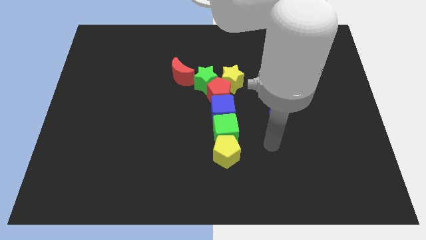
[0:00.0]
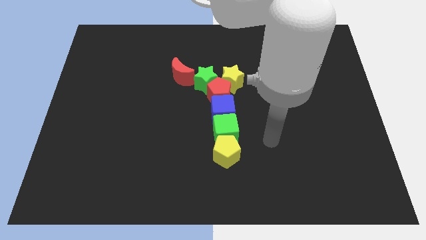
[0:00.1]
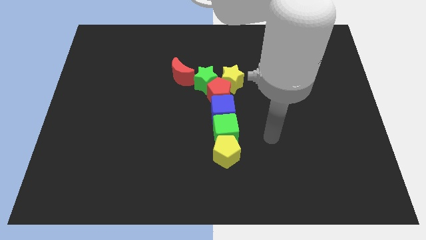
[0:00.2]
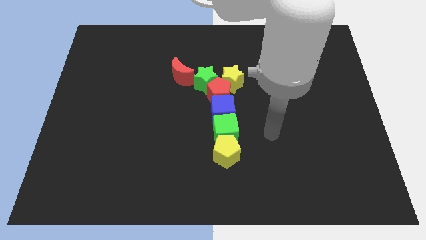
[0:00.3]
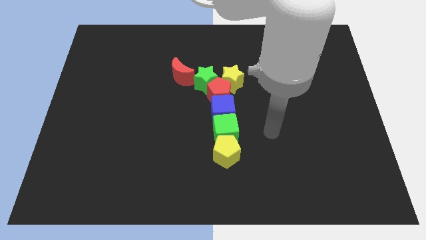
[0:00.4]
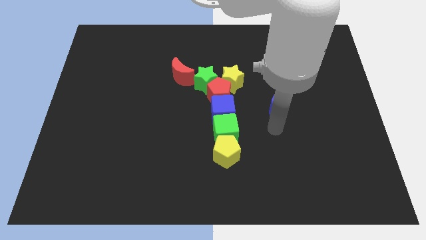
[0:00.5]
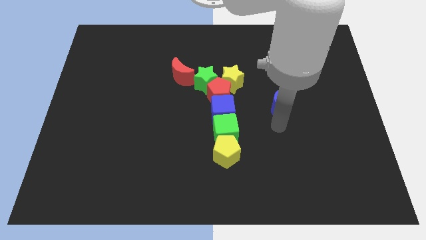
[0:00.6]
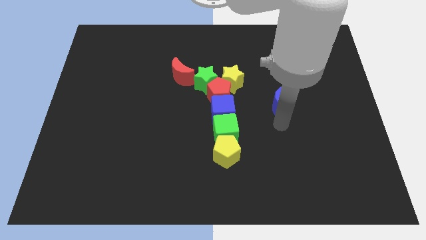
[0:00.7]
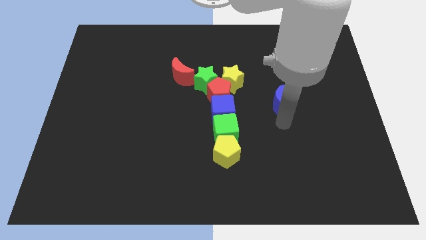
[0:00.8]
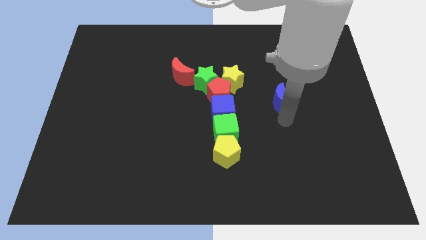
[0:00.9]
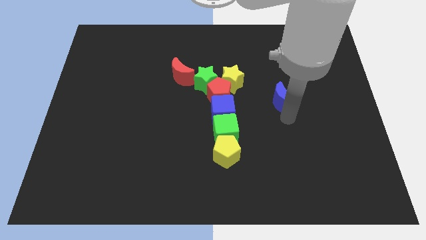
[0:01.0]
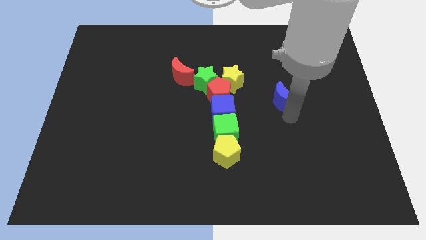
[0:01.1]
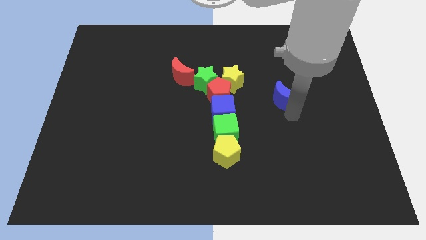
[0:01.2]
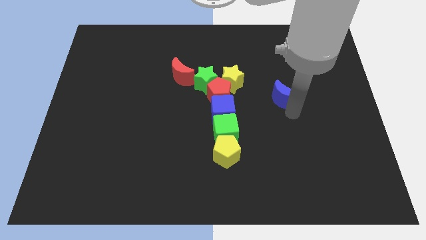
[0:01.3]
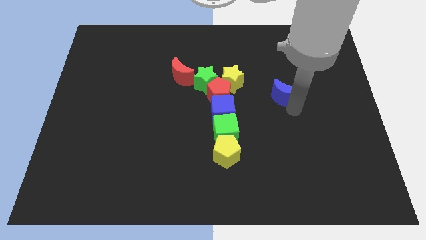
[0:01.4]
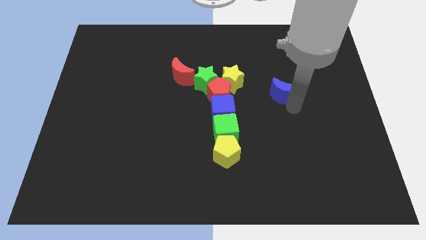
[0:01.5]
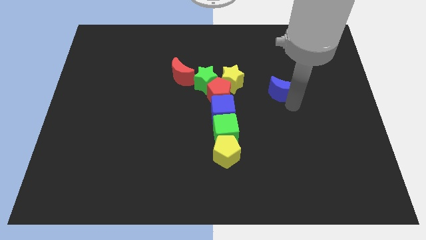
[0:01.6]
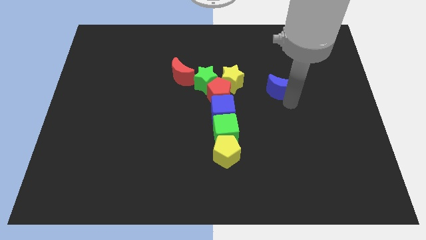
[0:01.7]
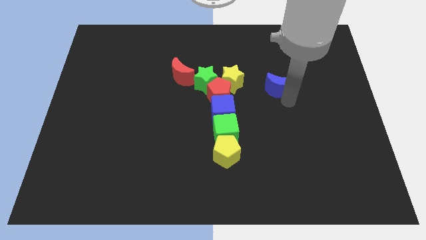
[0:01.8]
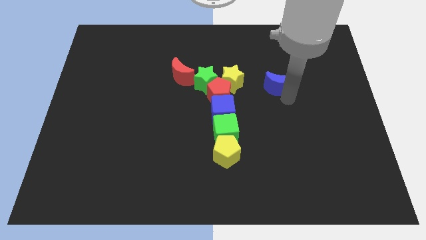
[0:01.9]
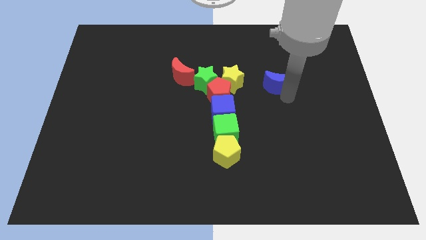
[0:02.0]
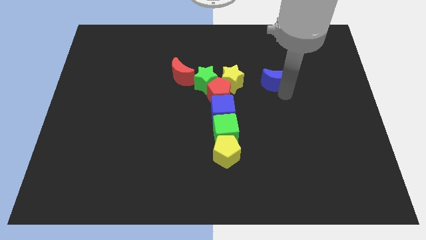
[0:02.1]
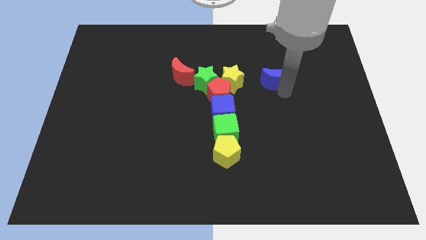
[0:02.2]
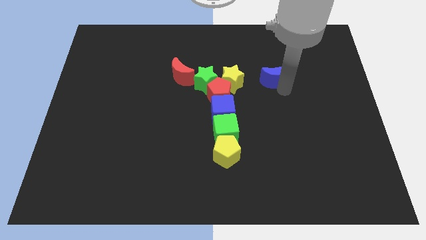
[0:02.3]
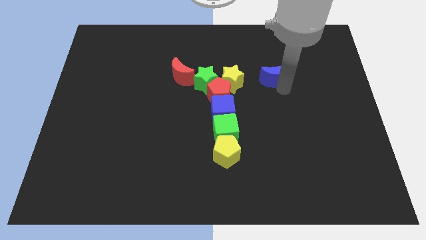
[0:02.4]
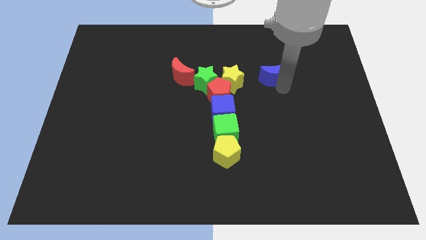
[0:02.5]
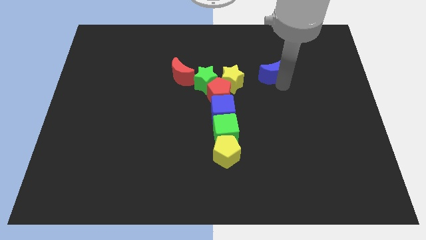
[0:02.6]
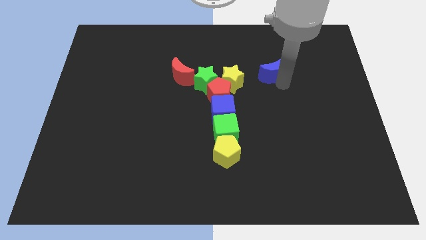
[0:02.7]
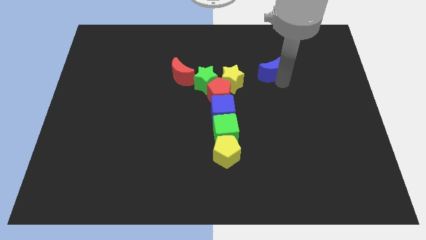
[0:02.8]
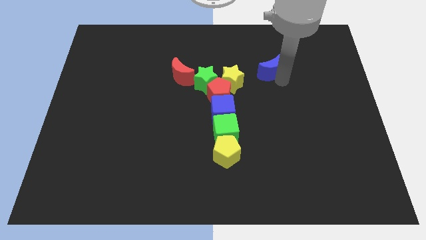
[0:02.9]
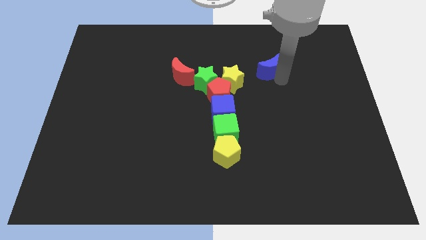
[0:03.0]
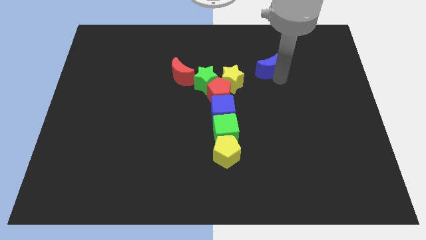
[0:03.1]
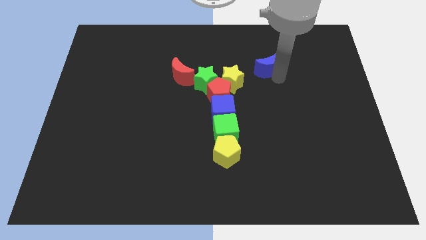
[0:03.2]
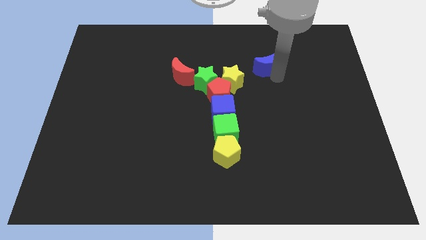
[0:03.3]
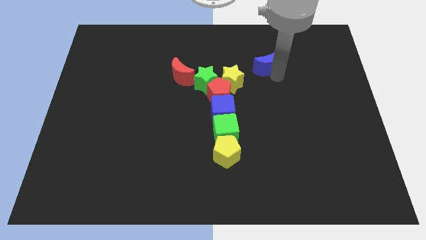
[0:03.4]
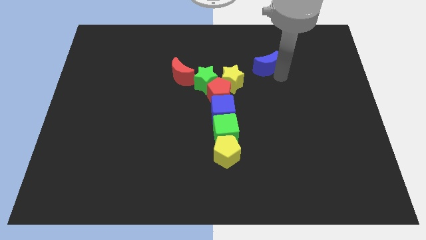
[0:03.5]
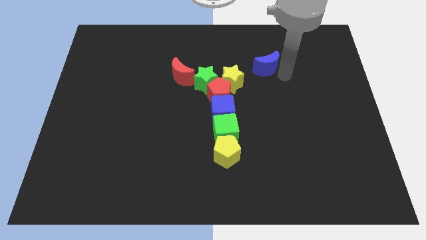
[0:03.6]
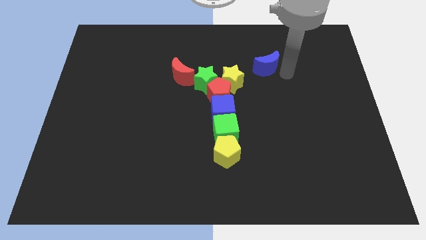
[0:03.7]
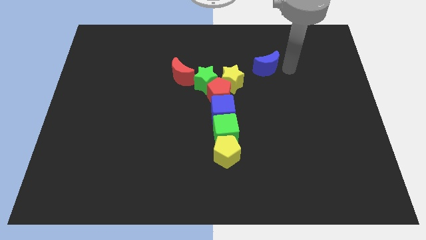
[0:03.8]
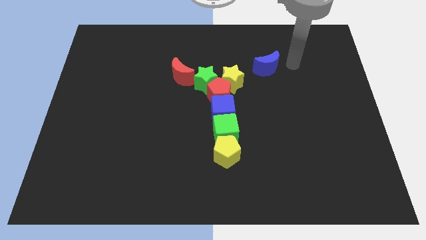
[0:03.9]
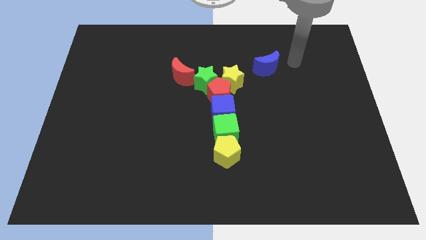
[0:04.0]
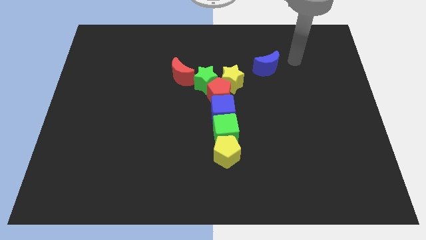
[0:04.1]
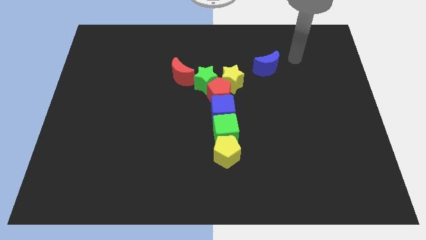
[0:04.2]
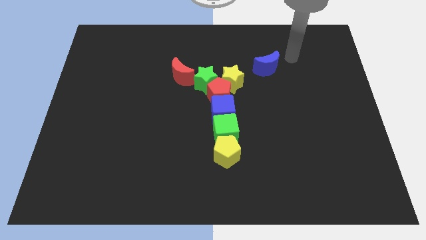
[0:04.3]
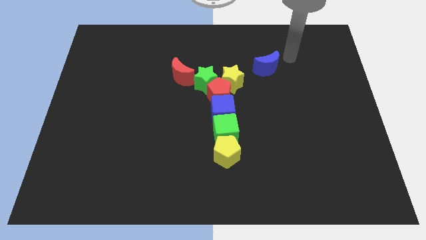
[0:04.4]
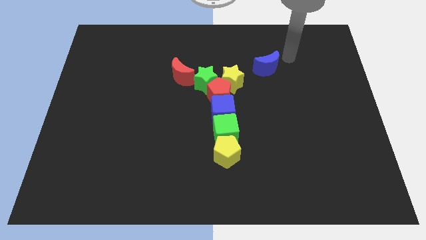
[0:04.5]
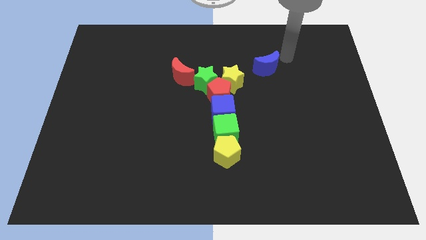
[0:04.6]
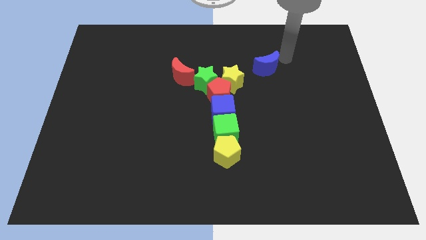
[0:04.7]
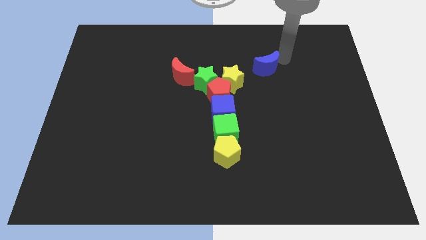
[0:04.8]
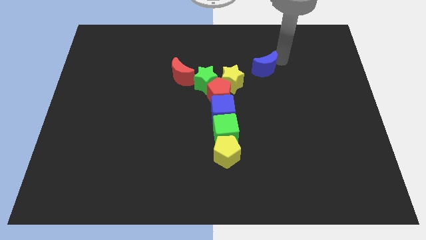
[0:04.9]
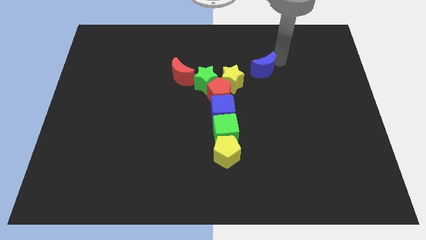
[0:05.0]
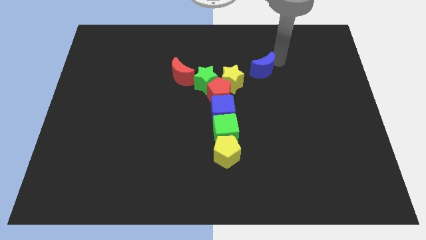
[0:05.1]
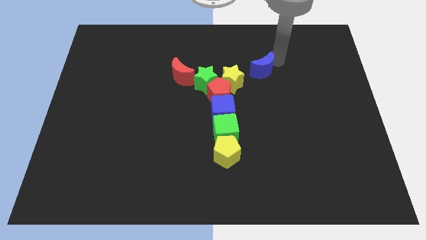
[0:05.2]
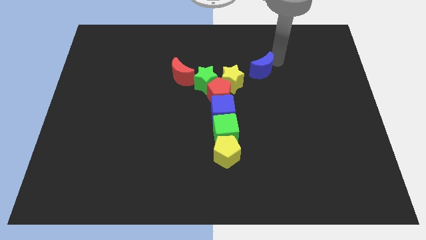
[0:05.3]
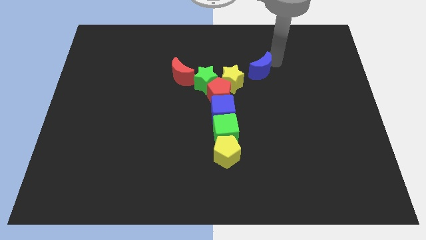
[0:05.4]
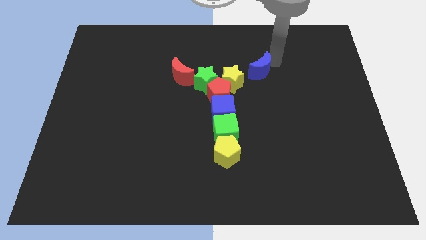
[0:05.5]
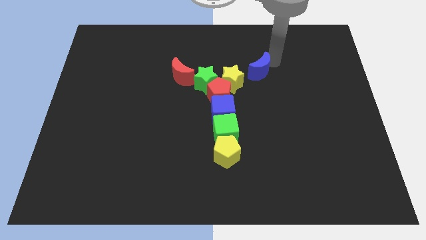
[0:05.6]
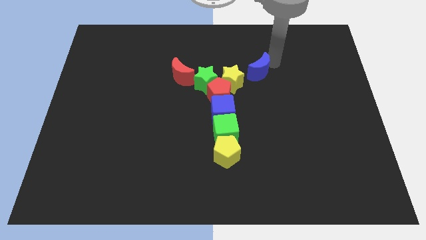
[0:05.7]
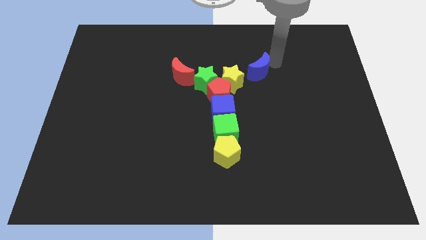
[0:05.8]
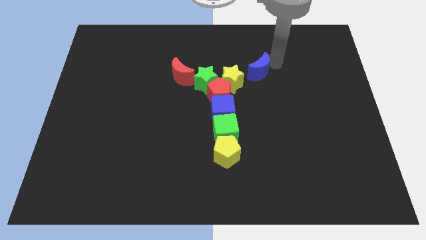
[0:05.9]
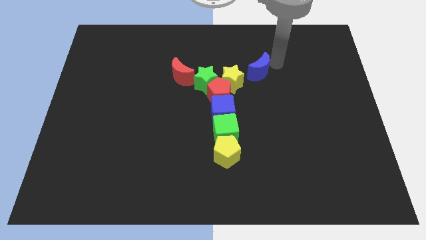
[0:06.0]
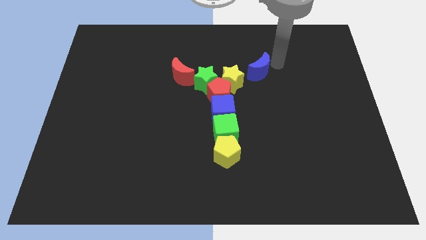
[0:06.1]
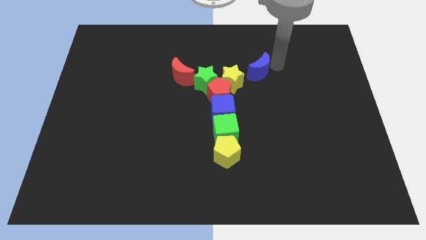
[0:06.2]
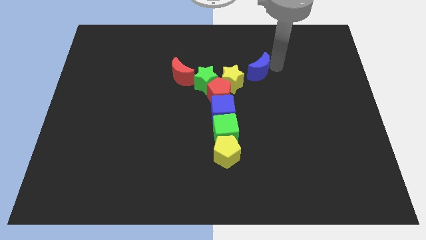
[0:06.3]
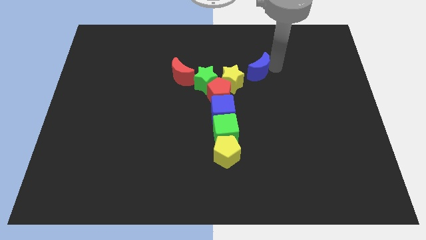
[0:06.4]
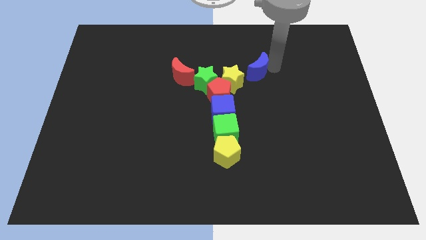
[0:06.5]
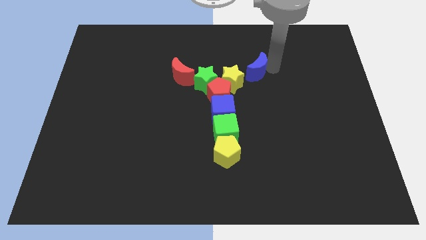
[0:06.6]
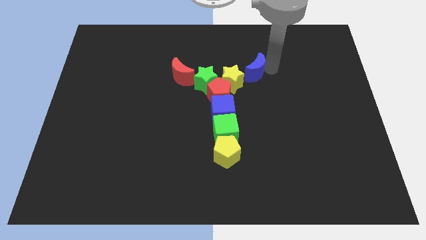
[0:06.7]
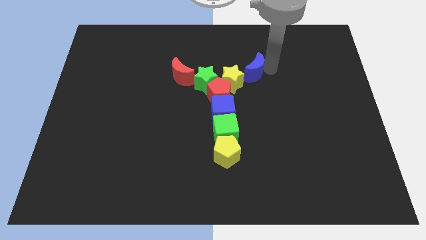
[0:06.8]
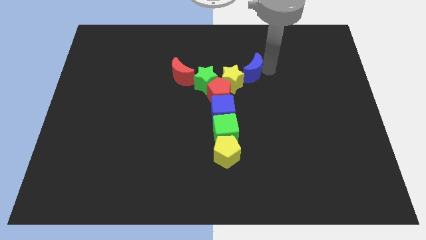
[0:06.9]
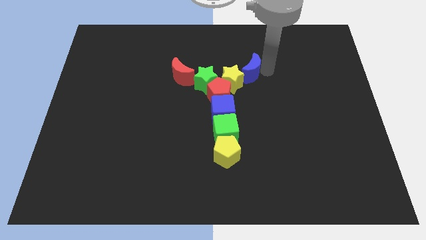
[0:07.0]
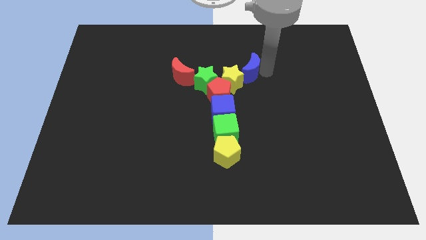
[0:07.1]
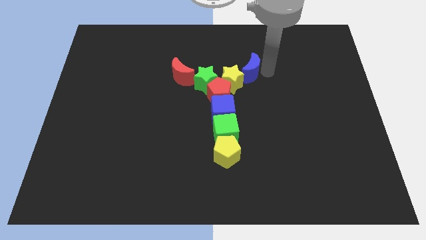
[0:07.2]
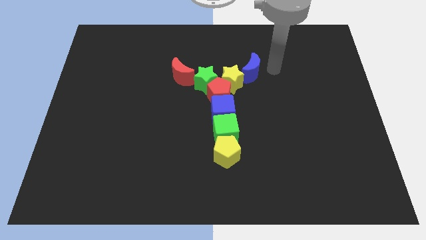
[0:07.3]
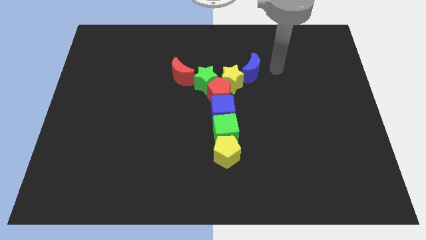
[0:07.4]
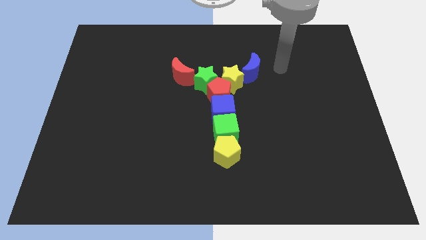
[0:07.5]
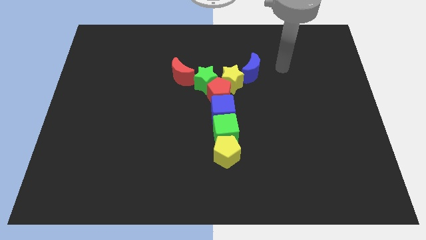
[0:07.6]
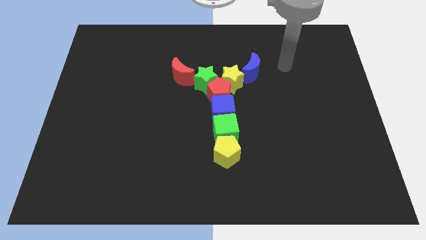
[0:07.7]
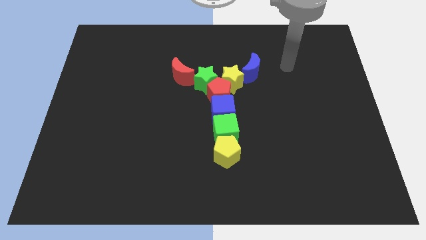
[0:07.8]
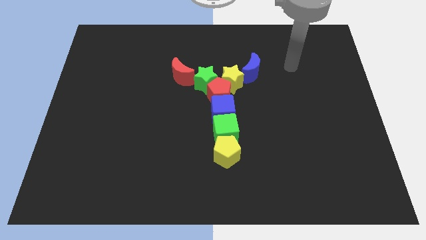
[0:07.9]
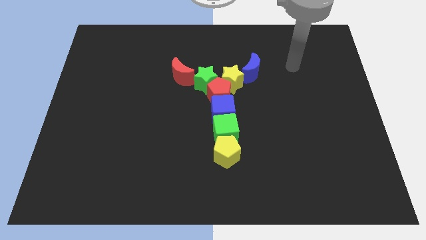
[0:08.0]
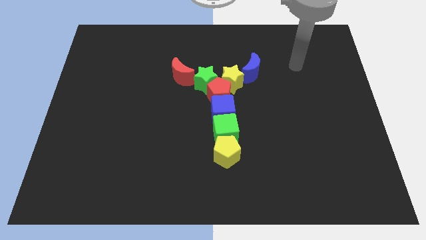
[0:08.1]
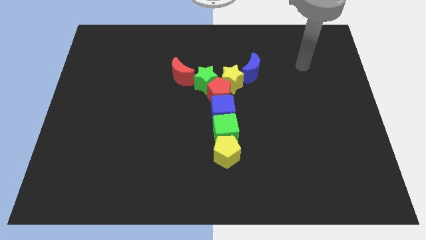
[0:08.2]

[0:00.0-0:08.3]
put the blue semicircle and yellow star together

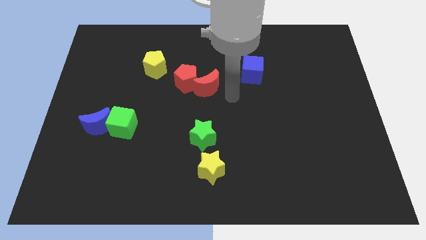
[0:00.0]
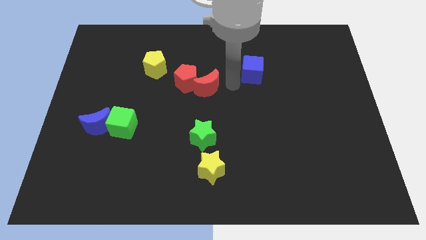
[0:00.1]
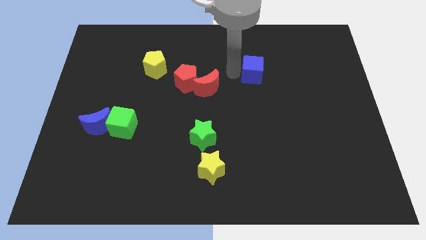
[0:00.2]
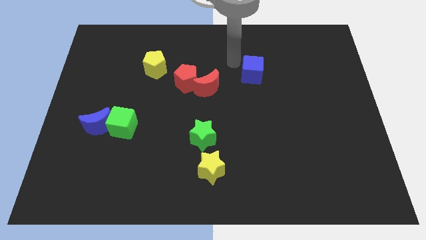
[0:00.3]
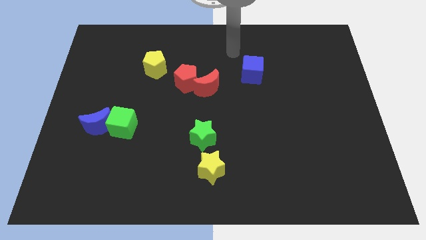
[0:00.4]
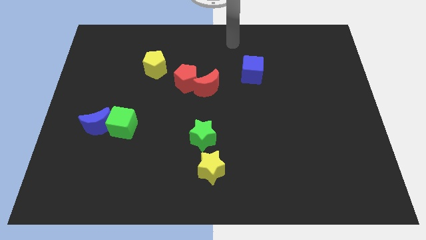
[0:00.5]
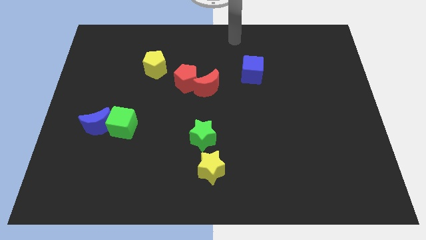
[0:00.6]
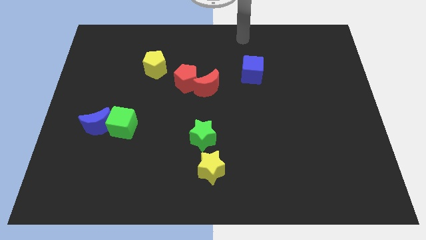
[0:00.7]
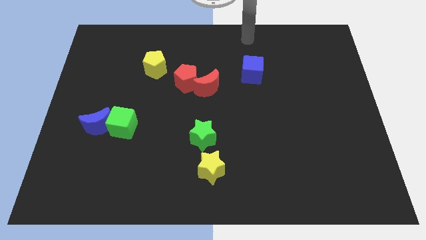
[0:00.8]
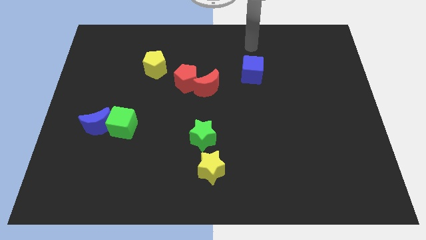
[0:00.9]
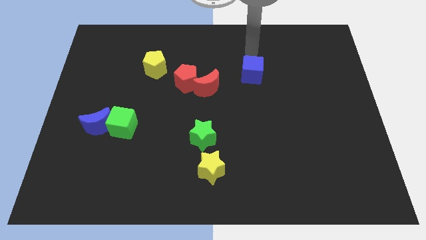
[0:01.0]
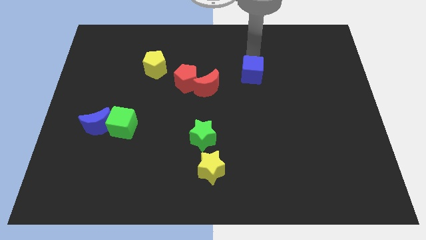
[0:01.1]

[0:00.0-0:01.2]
point your arm above blue cube
